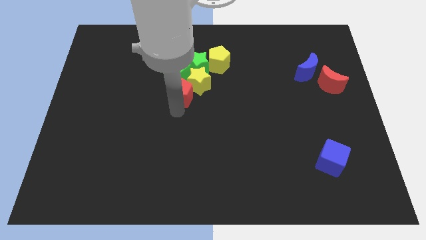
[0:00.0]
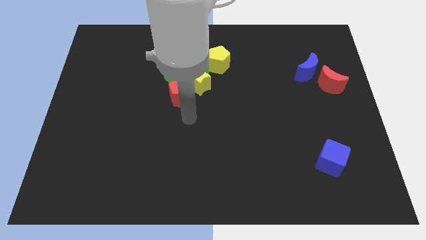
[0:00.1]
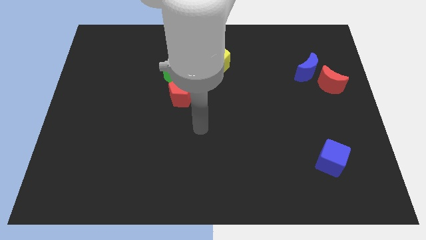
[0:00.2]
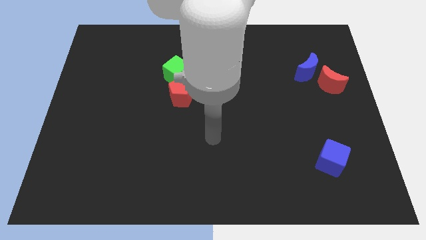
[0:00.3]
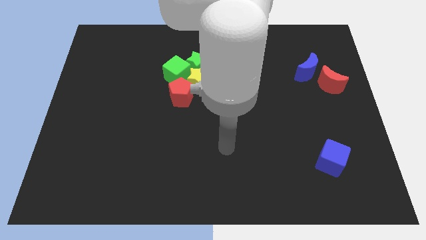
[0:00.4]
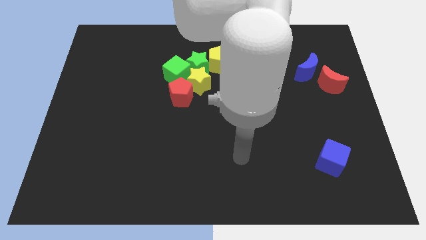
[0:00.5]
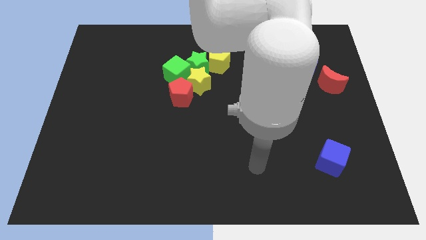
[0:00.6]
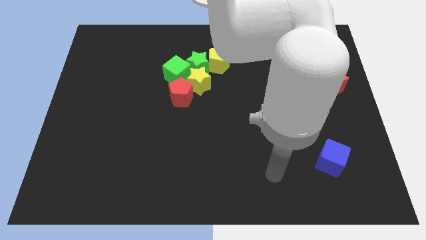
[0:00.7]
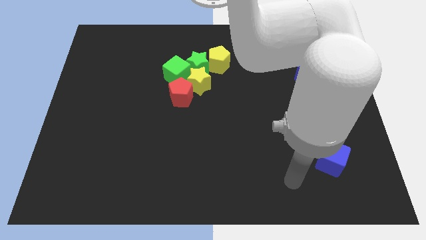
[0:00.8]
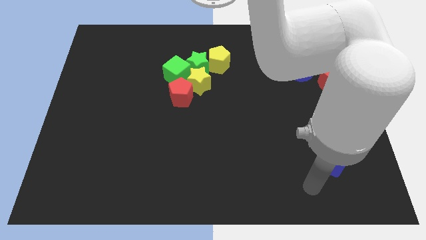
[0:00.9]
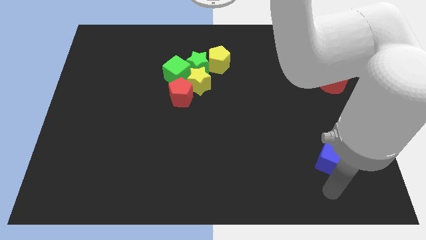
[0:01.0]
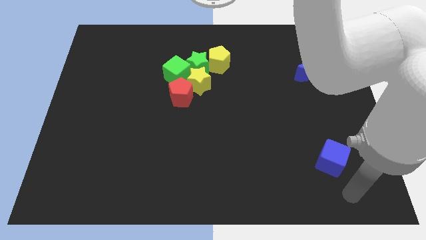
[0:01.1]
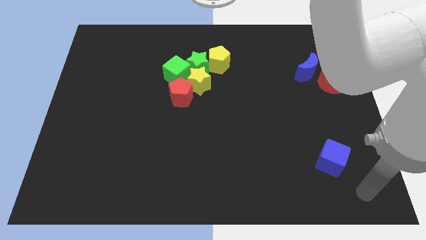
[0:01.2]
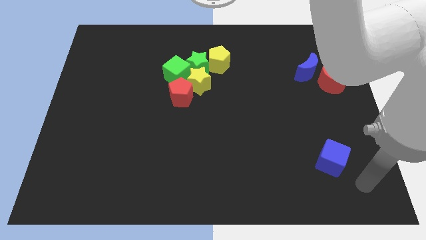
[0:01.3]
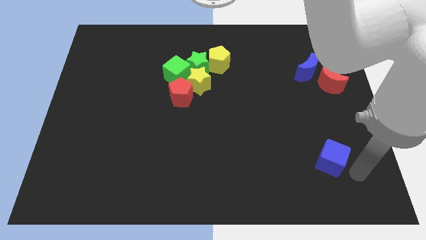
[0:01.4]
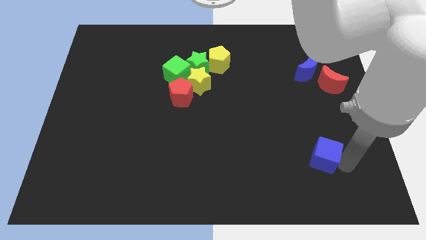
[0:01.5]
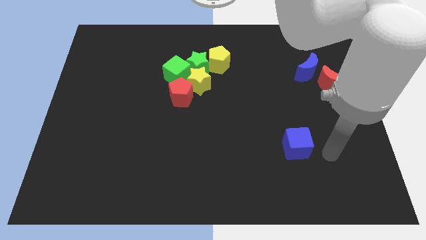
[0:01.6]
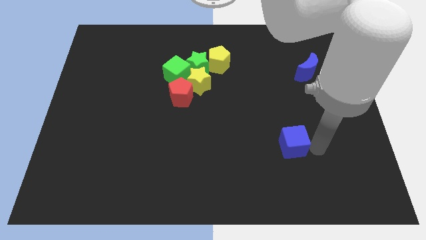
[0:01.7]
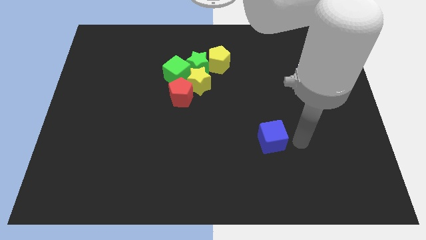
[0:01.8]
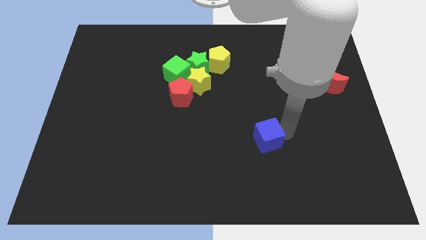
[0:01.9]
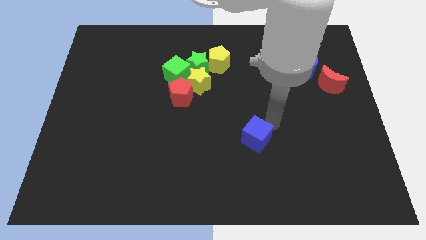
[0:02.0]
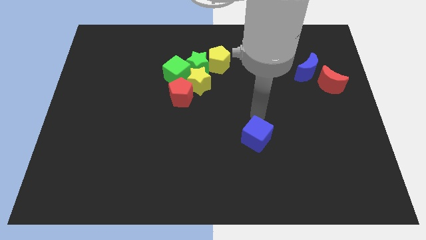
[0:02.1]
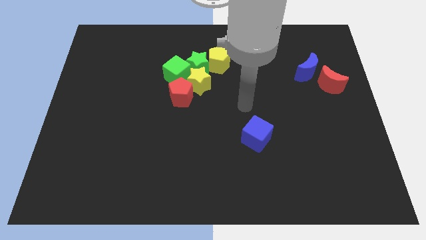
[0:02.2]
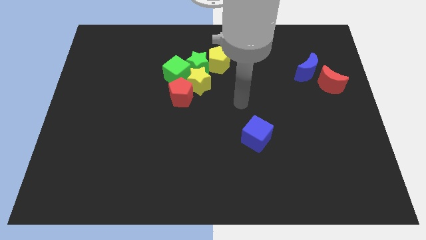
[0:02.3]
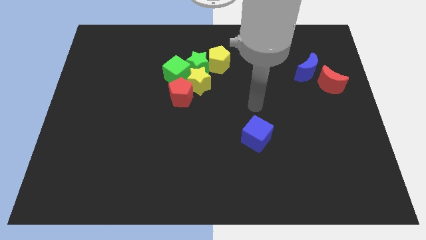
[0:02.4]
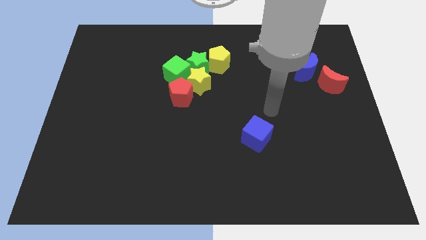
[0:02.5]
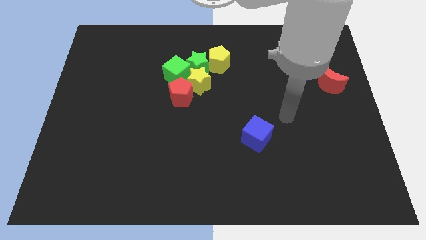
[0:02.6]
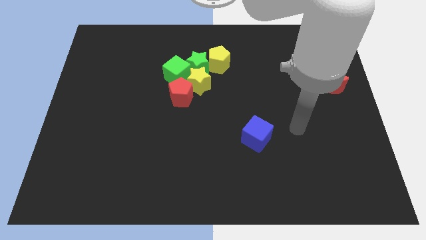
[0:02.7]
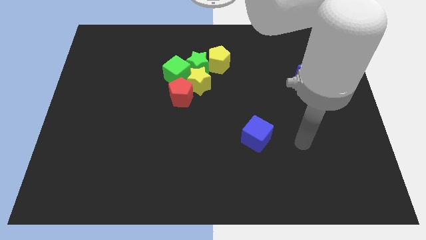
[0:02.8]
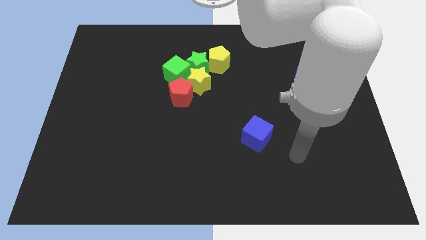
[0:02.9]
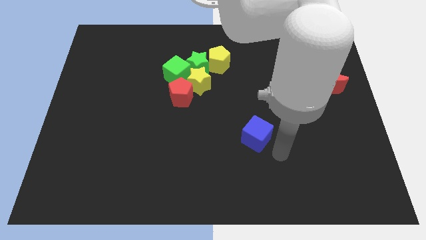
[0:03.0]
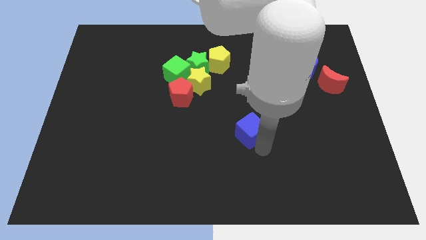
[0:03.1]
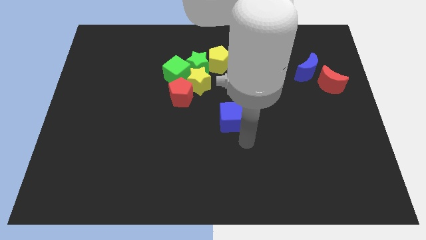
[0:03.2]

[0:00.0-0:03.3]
move the blue cube to the center of the board

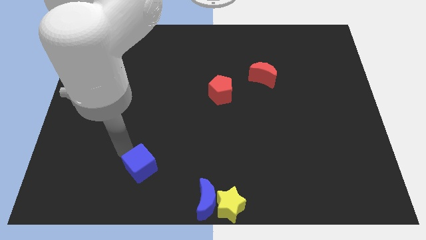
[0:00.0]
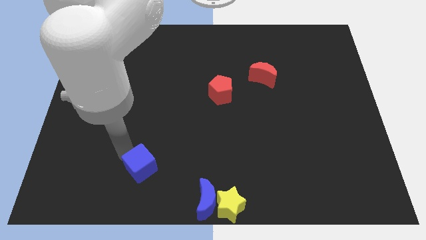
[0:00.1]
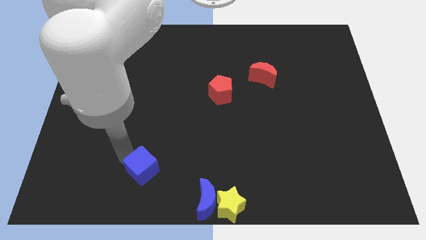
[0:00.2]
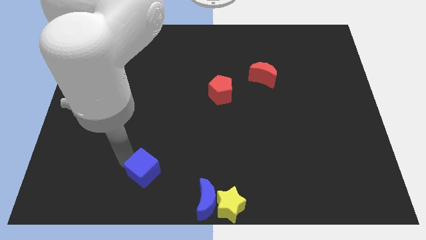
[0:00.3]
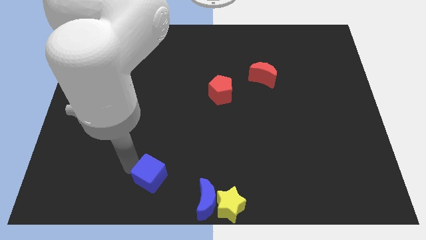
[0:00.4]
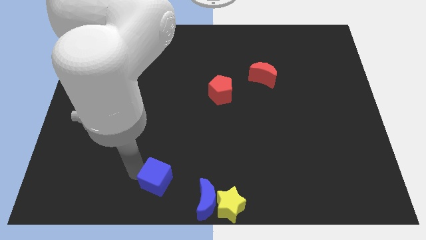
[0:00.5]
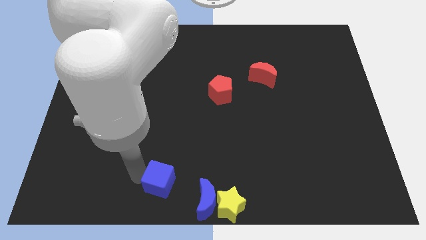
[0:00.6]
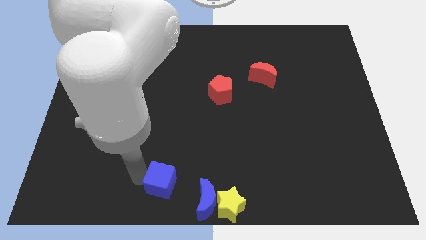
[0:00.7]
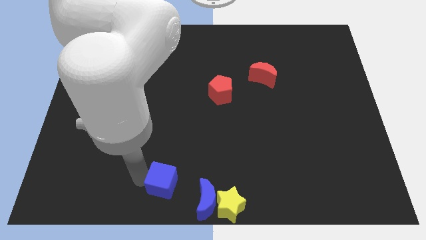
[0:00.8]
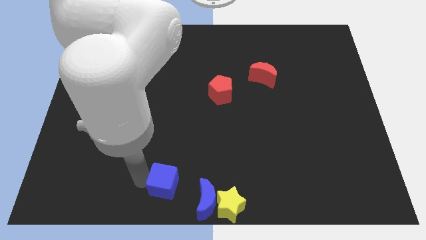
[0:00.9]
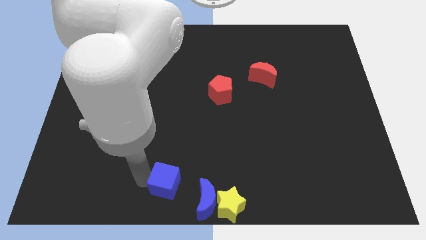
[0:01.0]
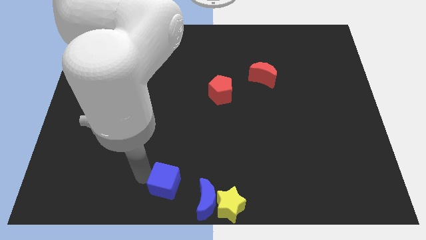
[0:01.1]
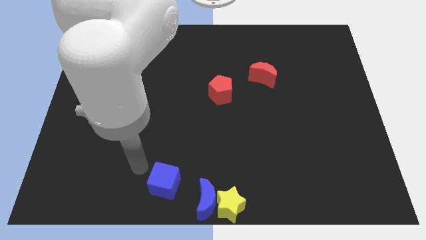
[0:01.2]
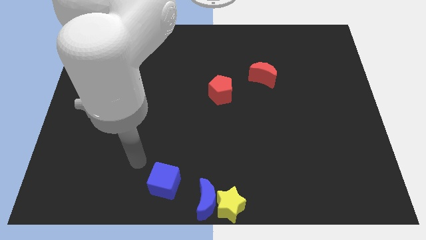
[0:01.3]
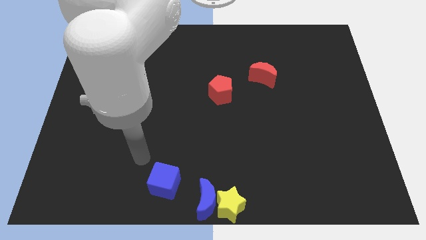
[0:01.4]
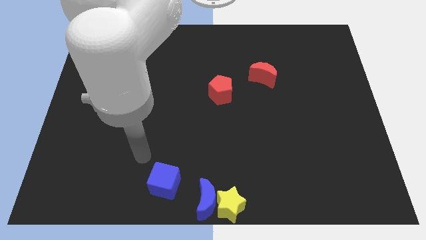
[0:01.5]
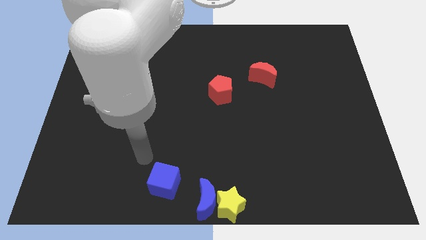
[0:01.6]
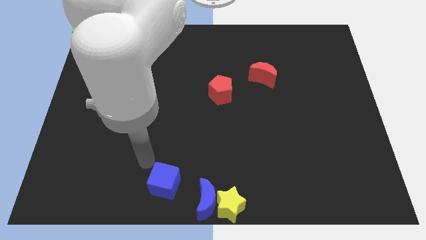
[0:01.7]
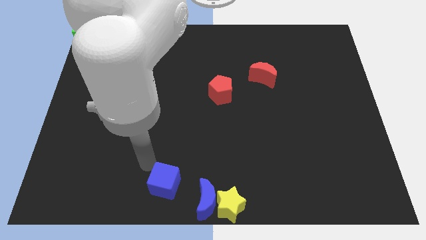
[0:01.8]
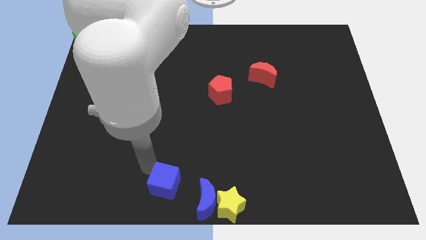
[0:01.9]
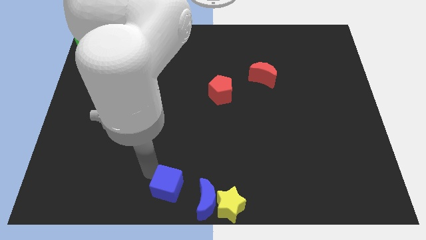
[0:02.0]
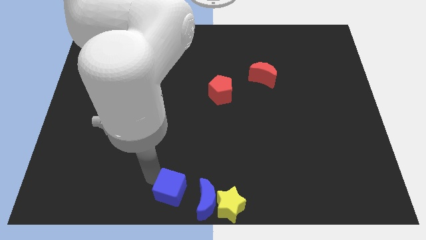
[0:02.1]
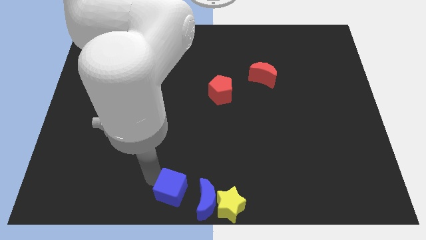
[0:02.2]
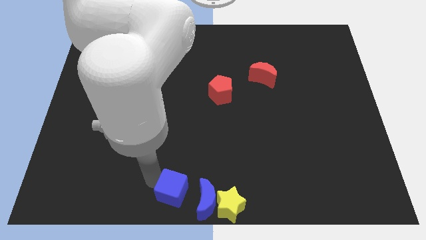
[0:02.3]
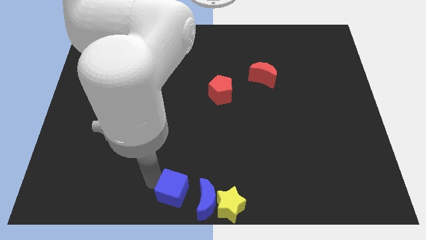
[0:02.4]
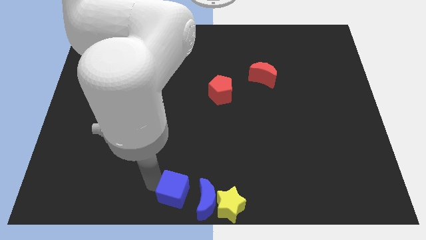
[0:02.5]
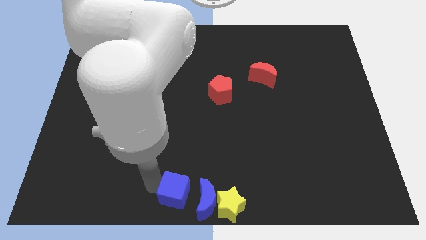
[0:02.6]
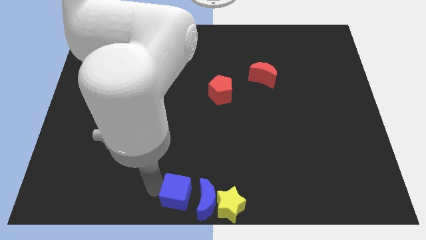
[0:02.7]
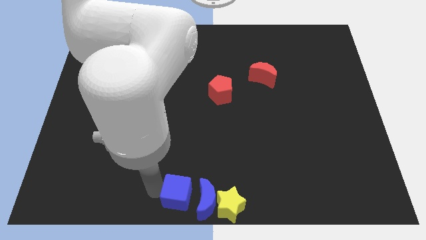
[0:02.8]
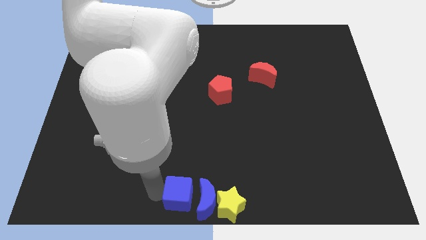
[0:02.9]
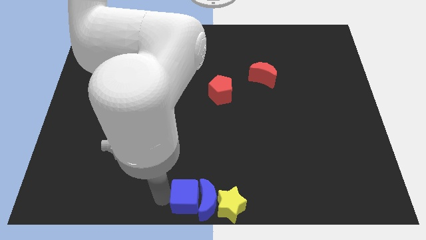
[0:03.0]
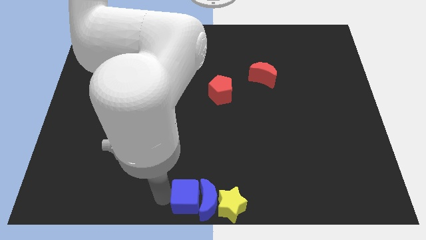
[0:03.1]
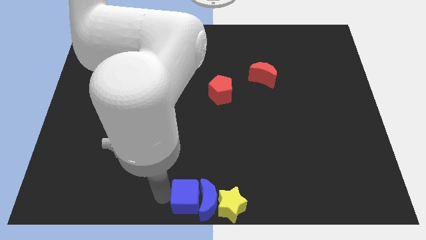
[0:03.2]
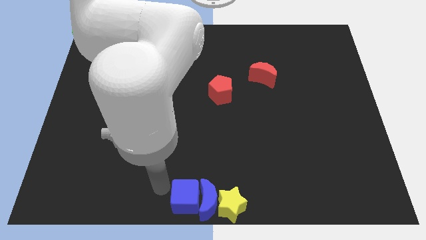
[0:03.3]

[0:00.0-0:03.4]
move the blue cube to the left of blue moon

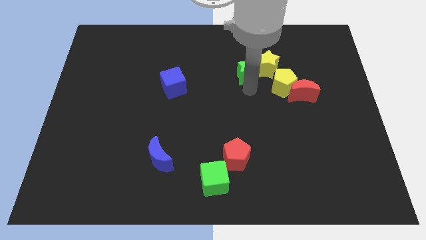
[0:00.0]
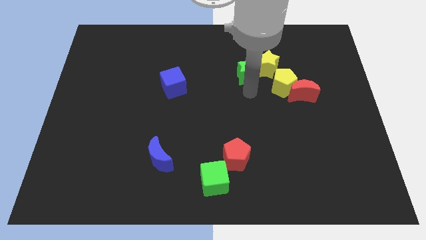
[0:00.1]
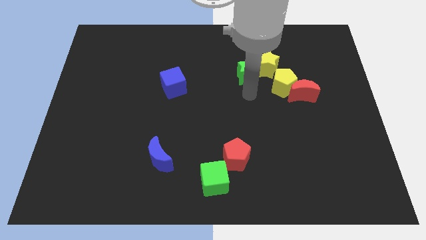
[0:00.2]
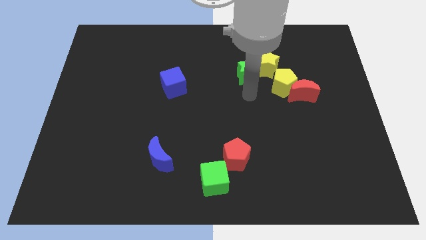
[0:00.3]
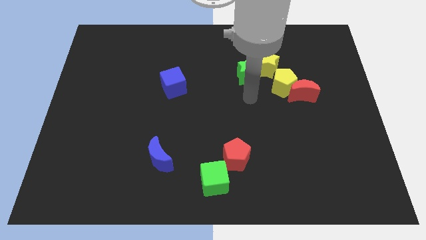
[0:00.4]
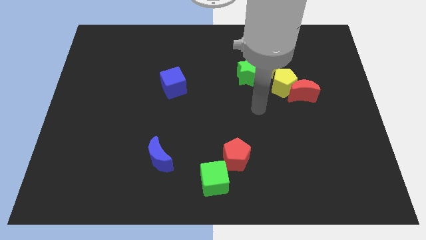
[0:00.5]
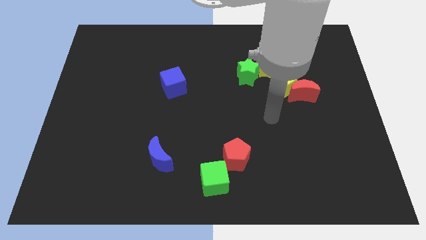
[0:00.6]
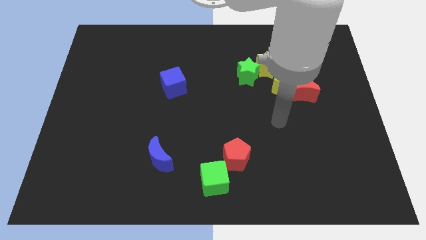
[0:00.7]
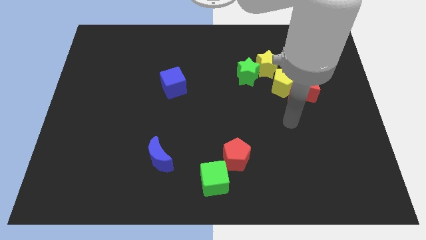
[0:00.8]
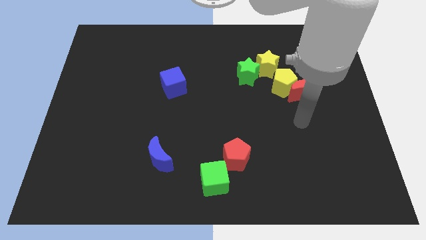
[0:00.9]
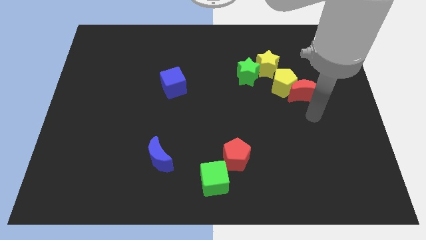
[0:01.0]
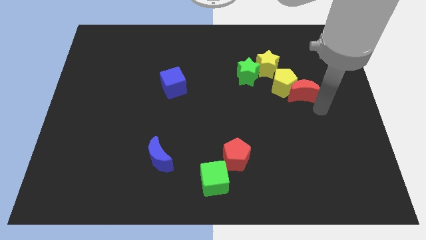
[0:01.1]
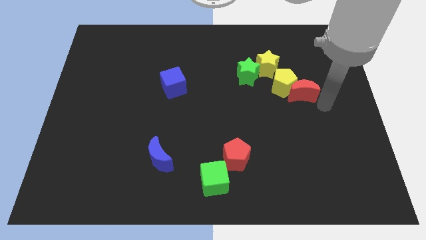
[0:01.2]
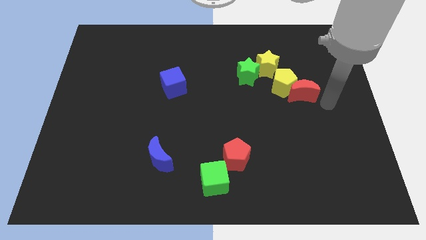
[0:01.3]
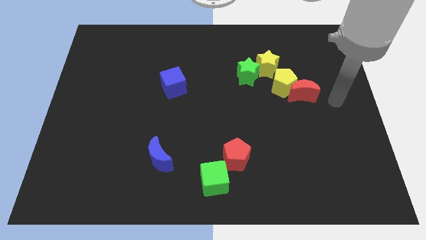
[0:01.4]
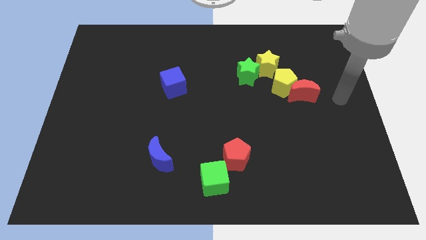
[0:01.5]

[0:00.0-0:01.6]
place your arm to the right of the red crescent

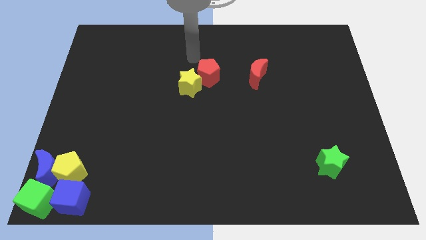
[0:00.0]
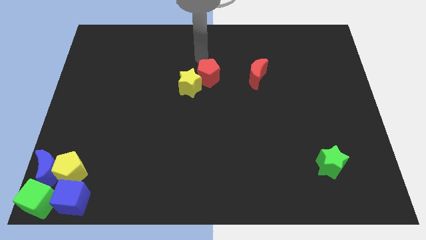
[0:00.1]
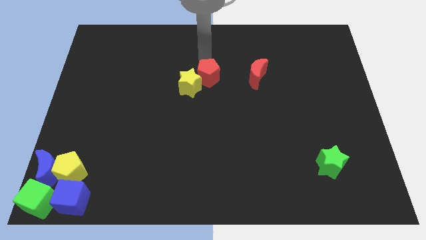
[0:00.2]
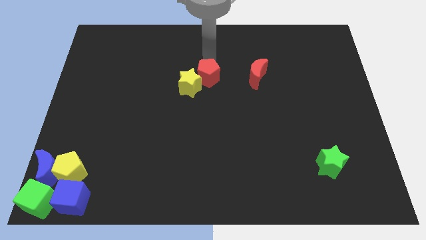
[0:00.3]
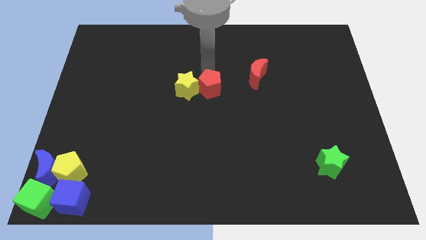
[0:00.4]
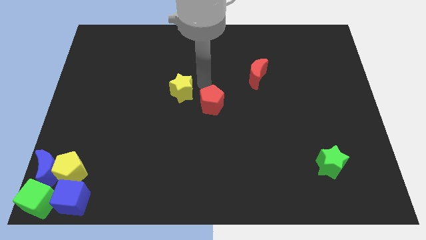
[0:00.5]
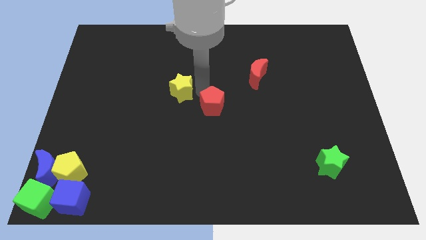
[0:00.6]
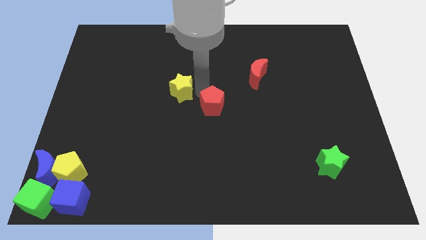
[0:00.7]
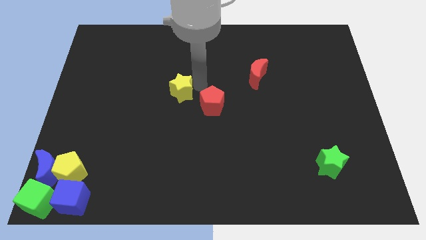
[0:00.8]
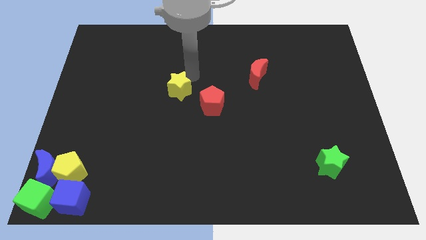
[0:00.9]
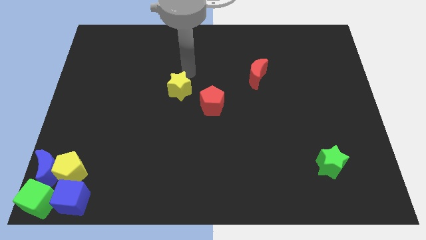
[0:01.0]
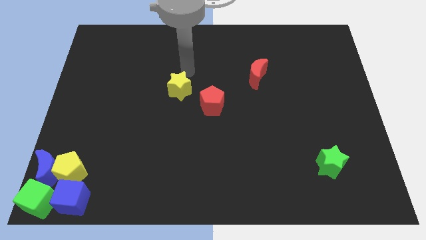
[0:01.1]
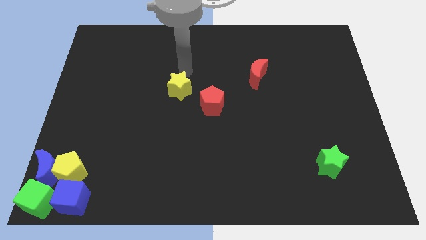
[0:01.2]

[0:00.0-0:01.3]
push the red pentagon slightly to the bottom
